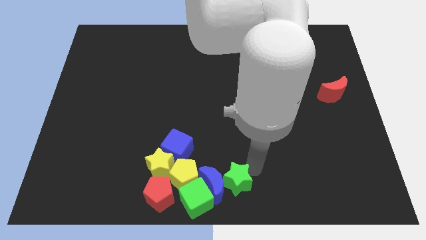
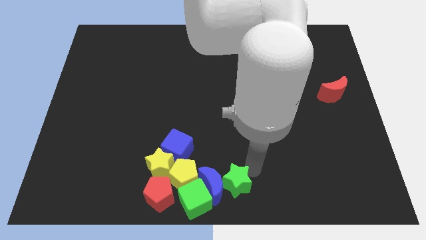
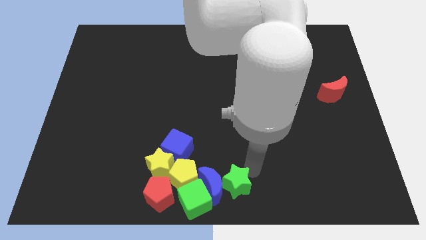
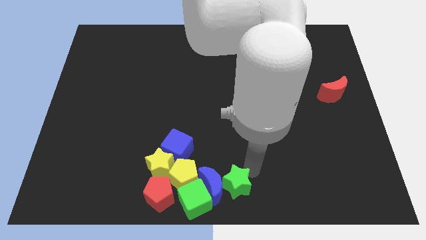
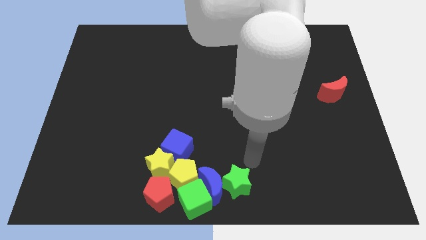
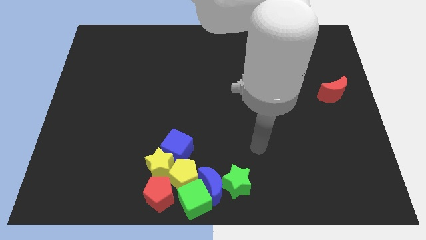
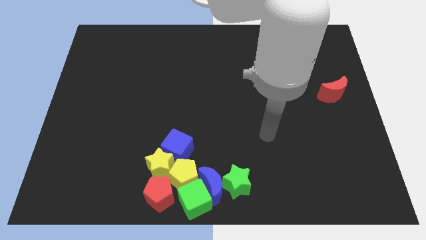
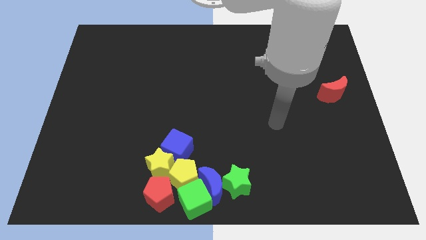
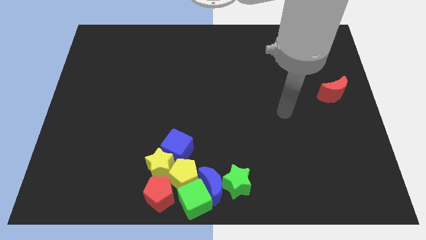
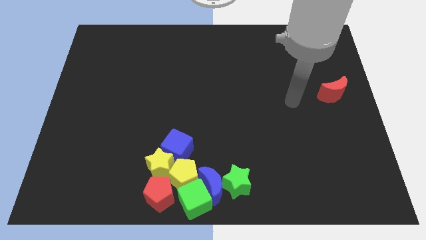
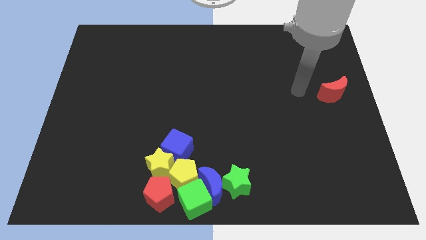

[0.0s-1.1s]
move arm away from the green star

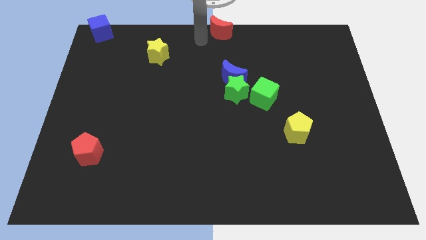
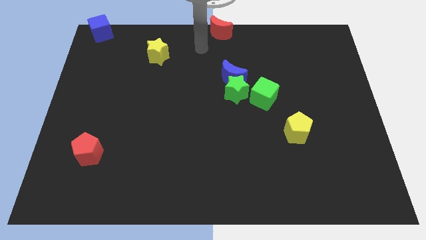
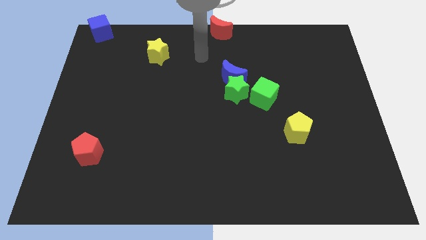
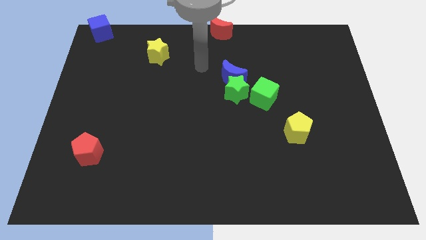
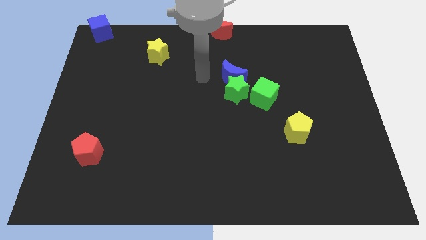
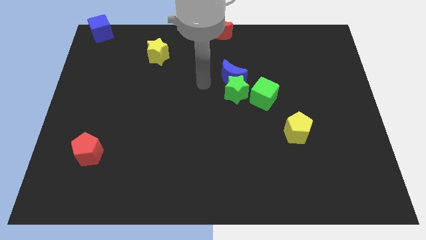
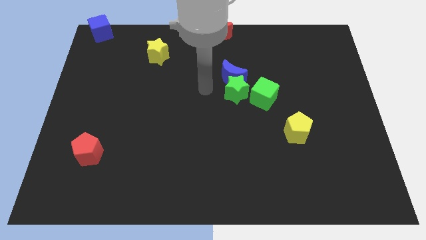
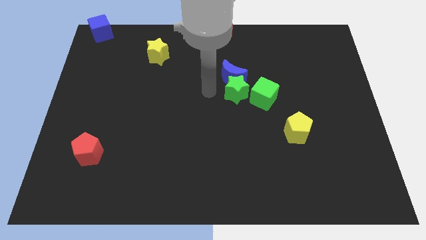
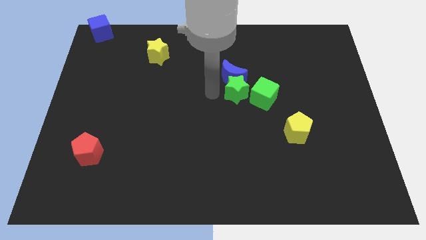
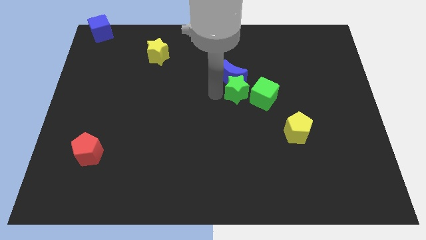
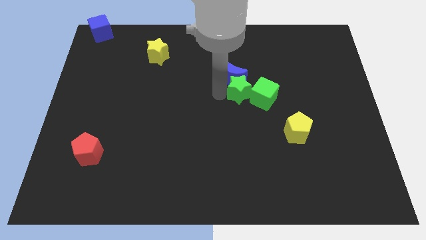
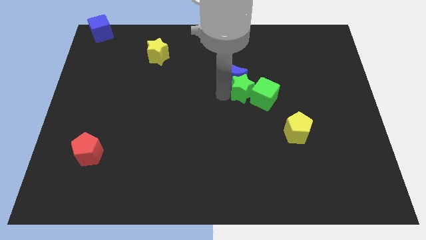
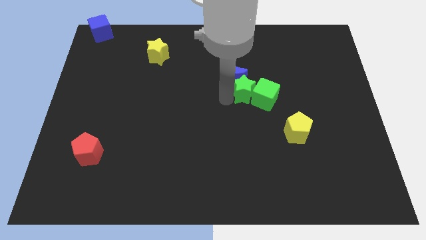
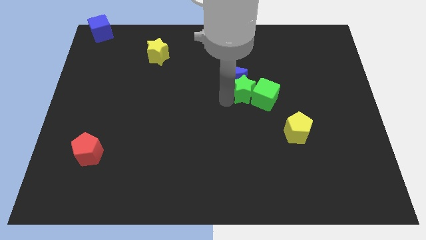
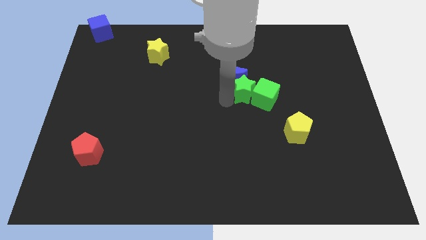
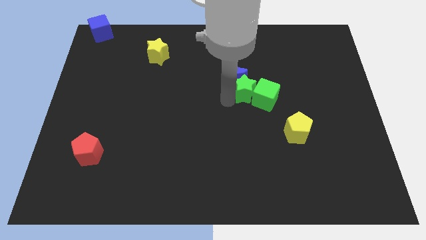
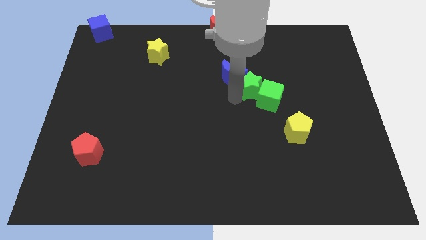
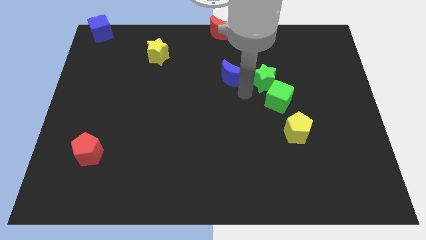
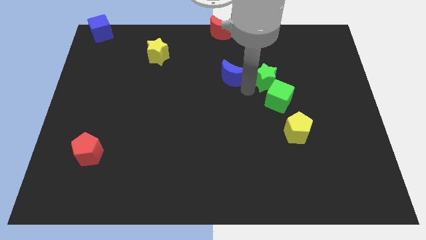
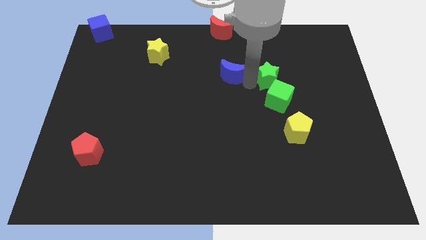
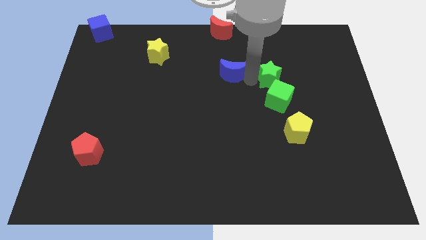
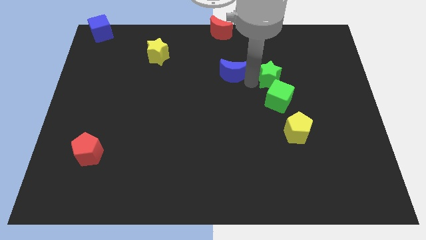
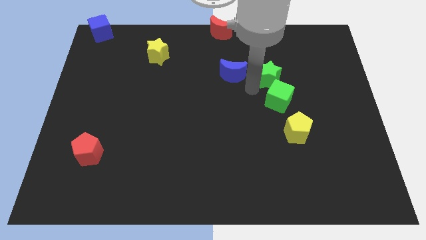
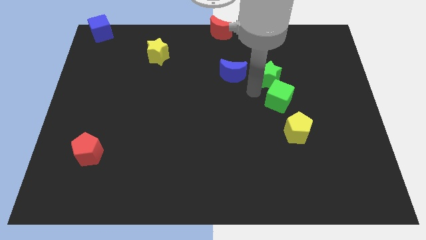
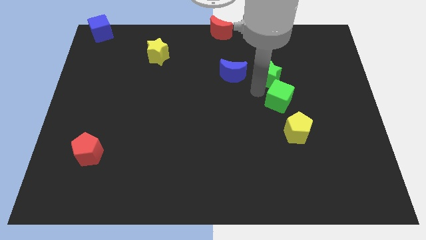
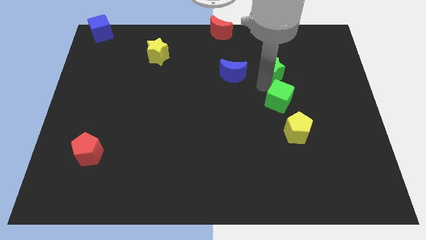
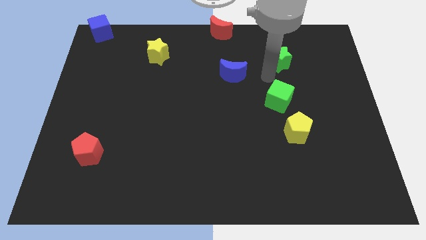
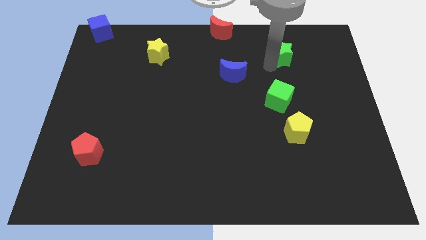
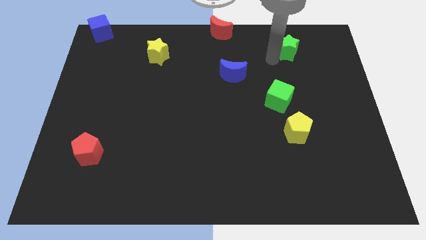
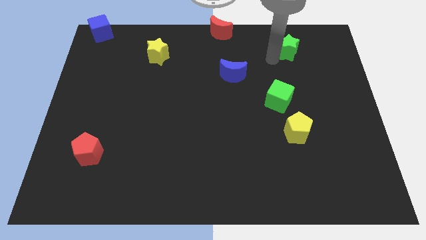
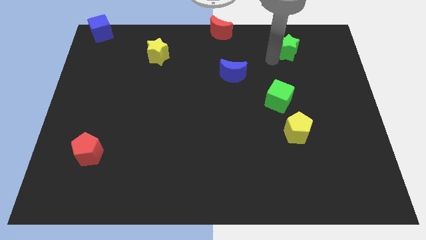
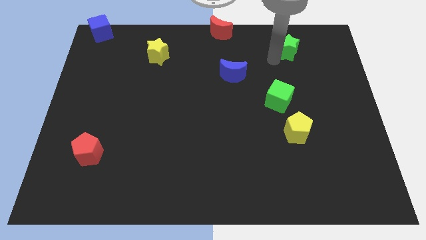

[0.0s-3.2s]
seperate the green star from the blue crescent and green cube

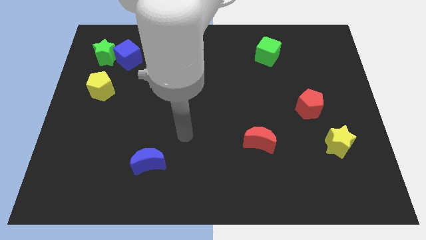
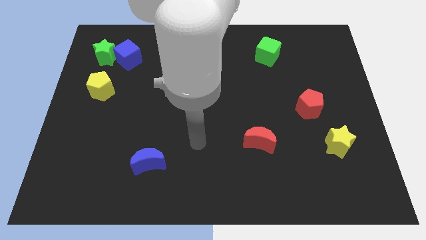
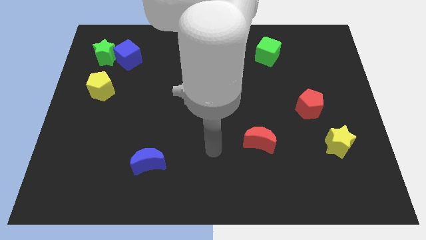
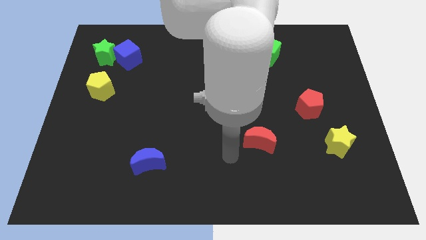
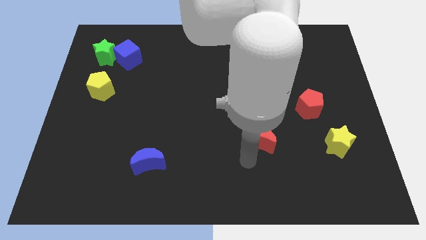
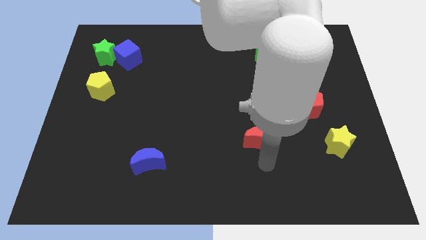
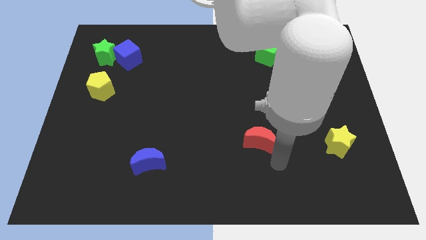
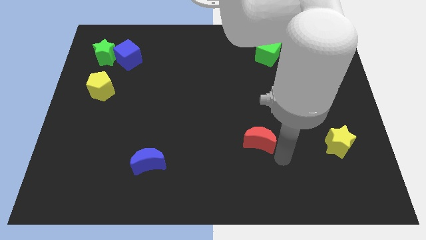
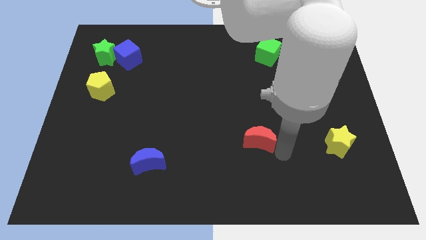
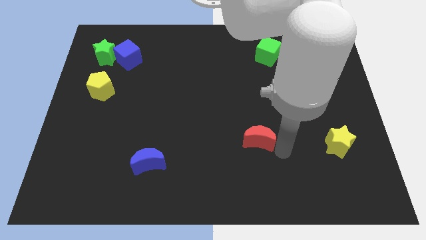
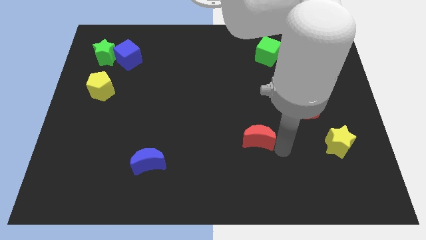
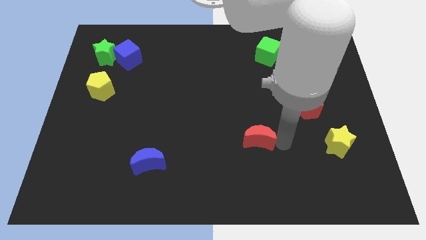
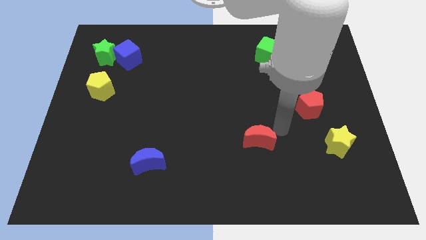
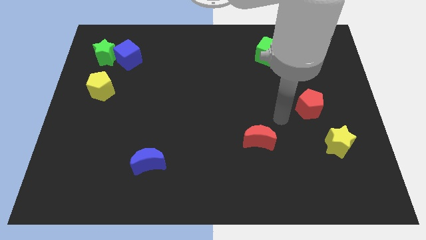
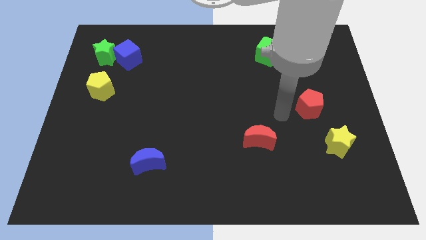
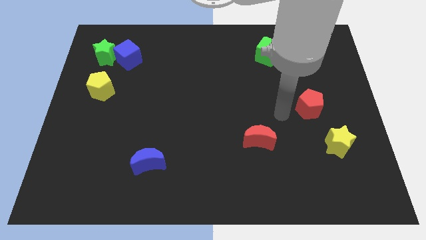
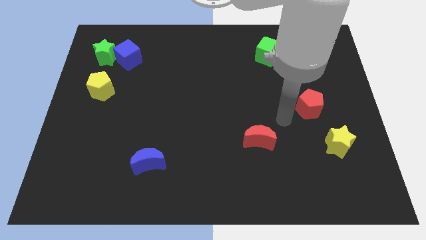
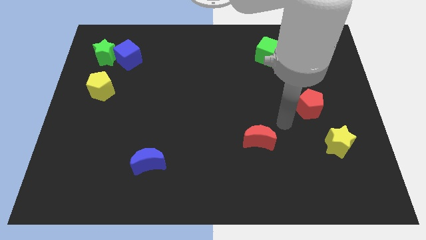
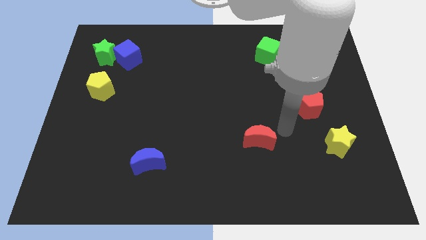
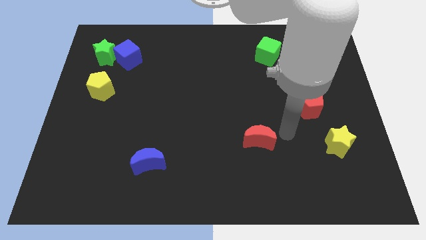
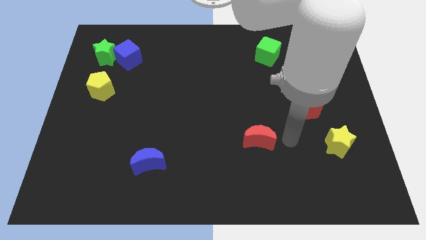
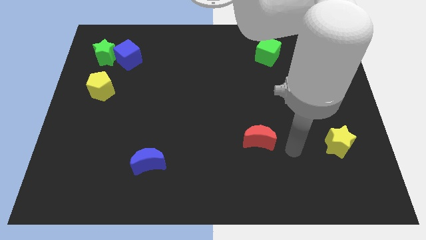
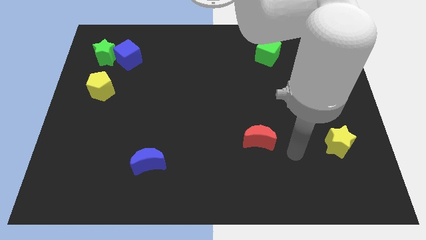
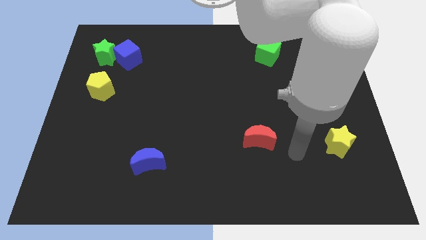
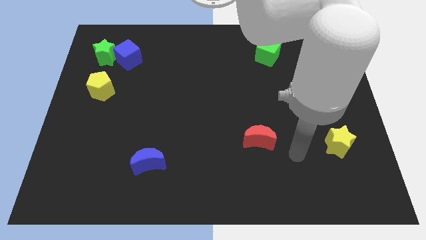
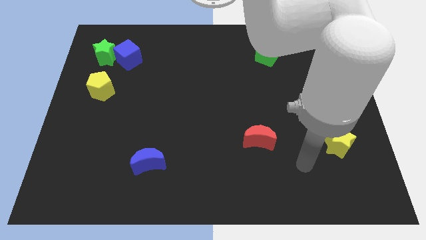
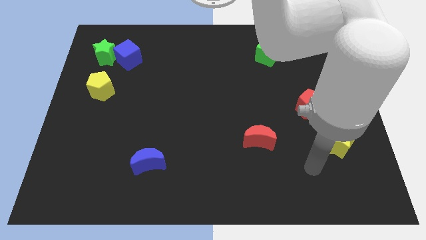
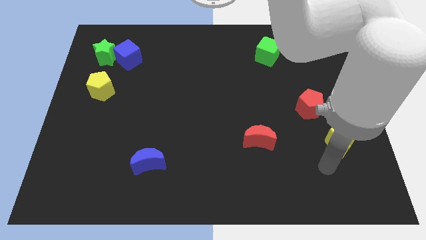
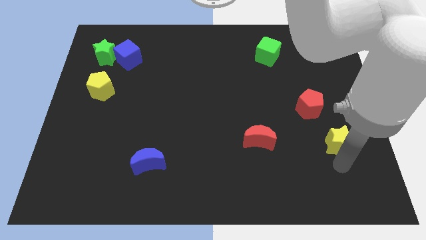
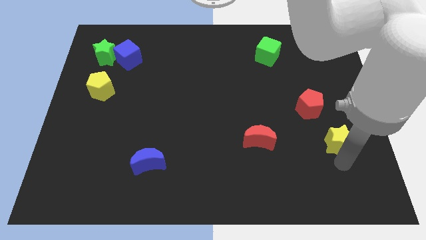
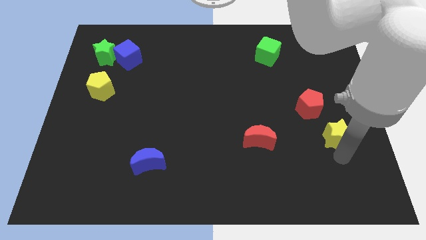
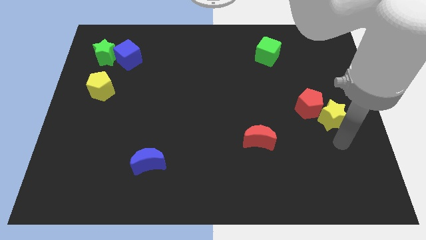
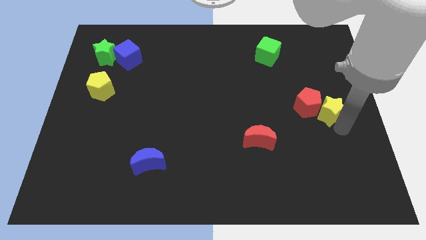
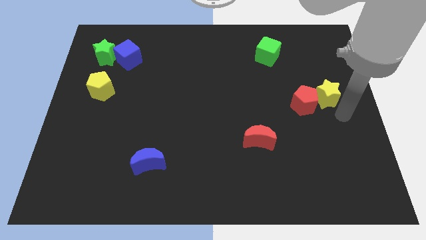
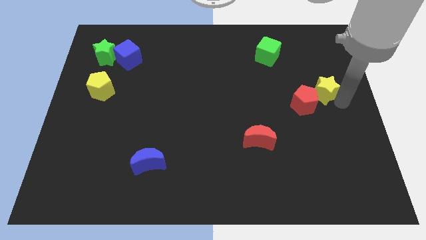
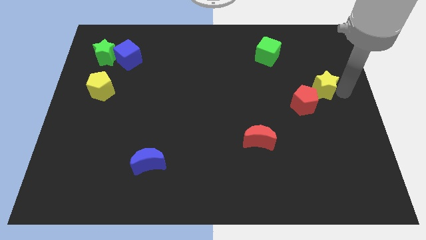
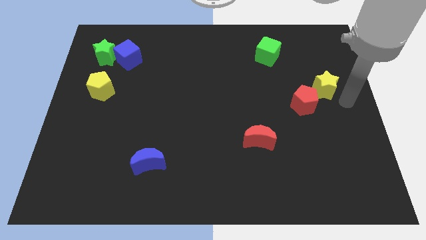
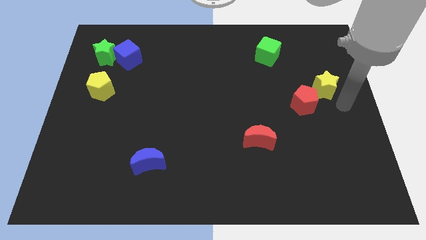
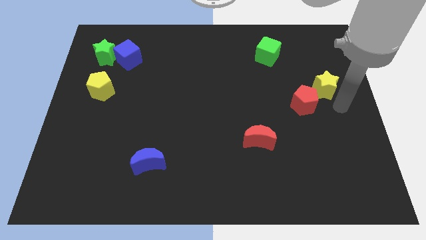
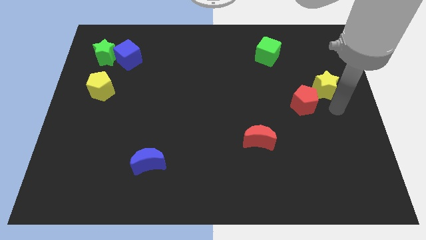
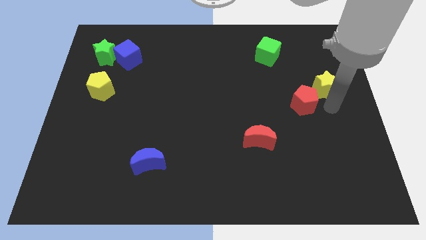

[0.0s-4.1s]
place the yellow star to the right side of the red pentagon

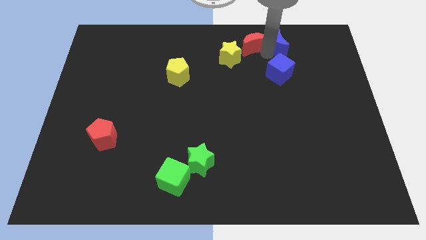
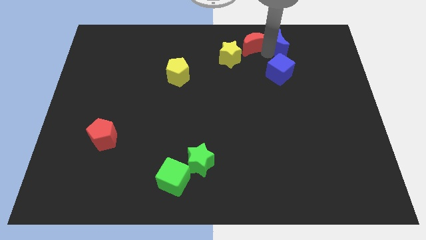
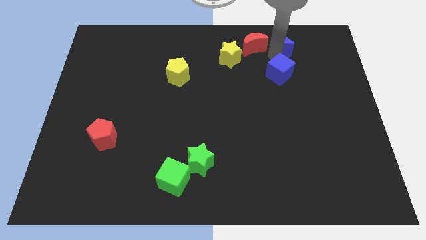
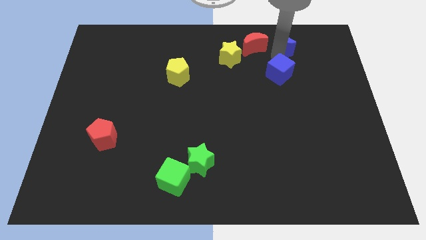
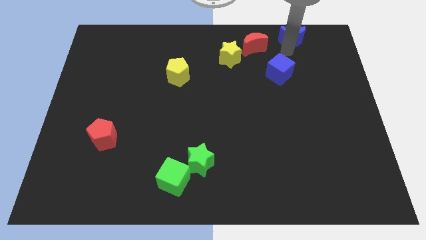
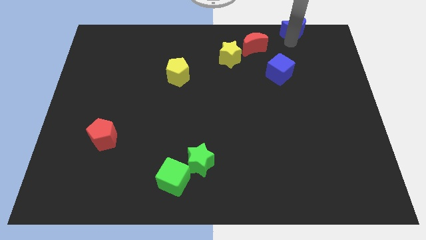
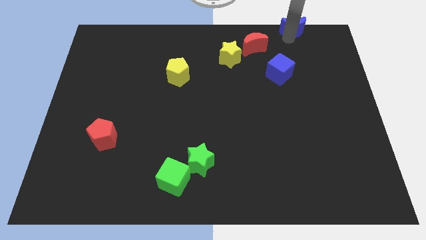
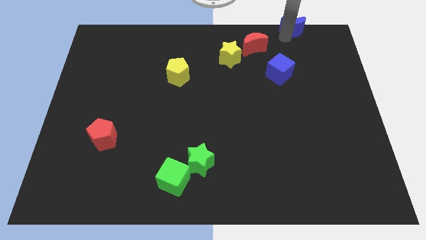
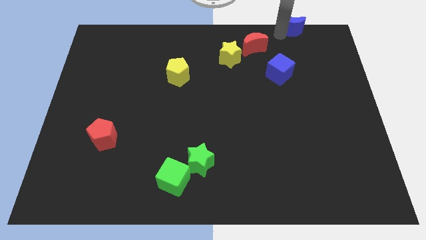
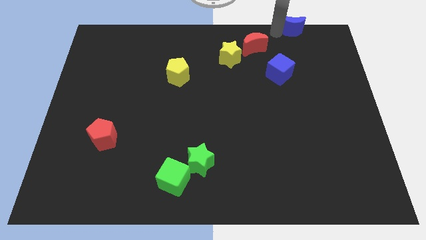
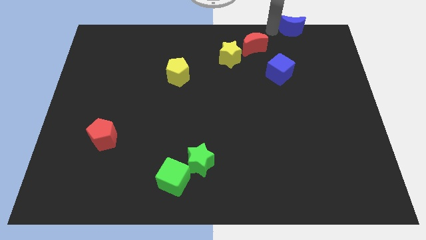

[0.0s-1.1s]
push the blue crescent to the top right of the red crescent
